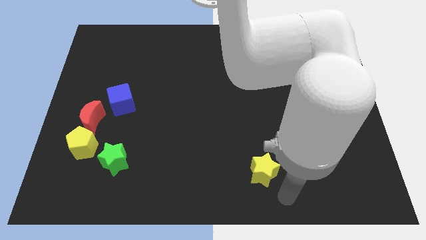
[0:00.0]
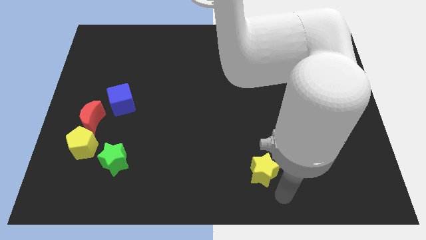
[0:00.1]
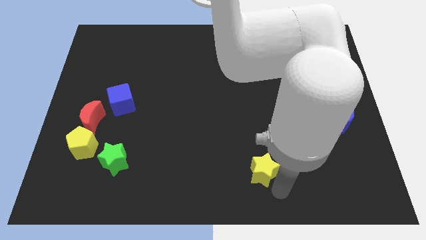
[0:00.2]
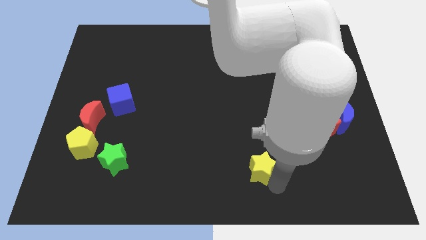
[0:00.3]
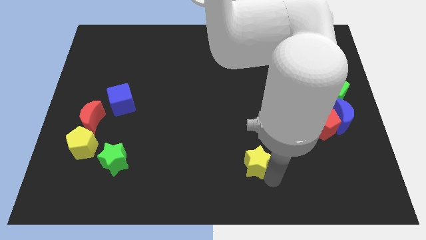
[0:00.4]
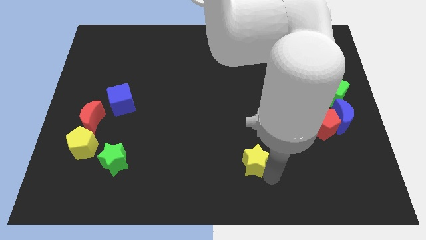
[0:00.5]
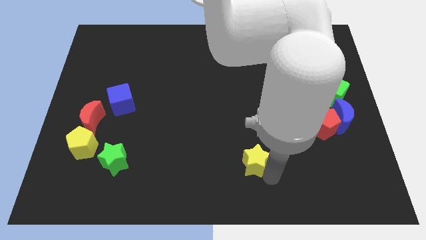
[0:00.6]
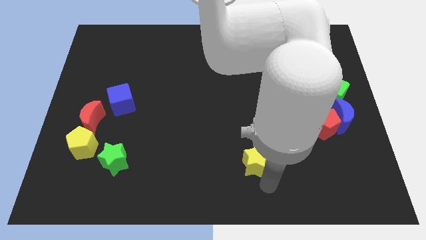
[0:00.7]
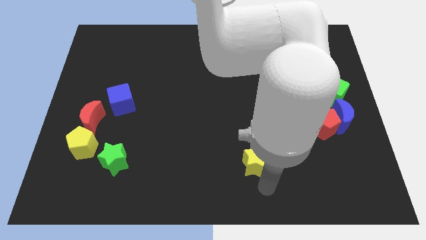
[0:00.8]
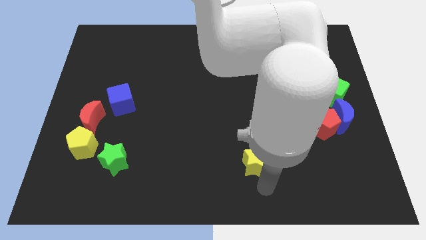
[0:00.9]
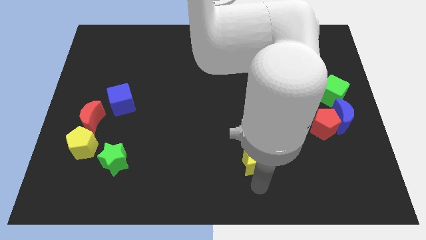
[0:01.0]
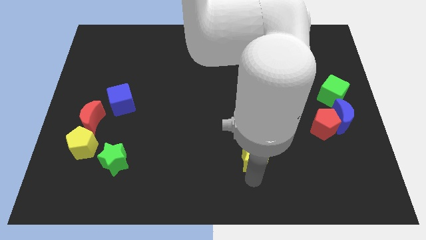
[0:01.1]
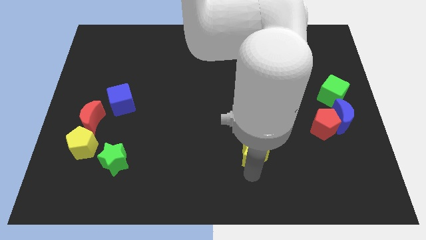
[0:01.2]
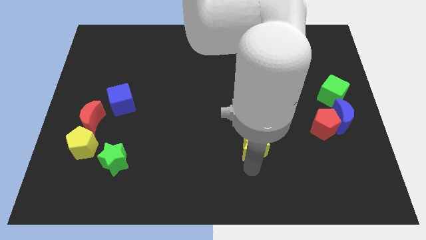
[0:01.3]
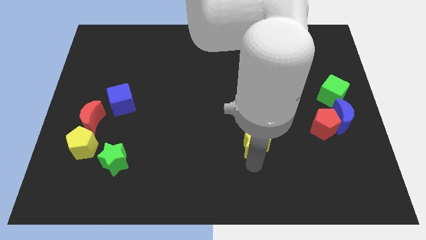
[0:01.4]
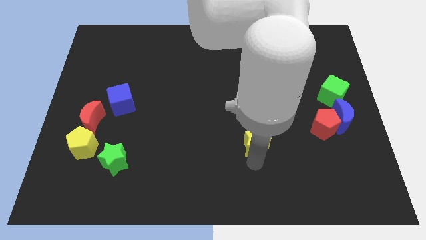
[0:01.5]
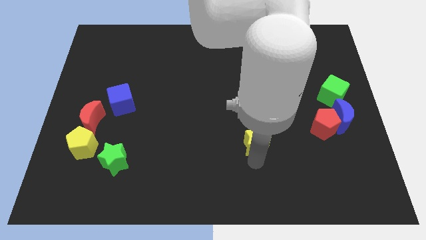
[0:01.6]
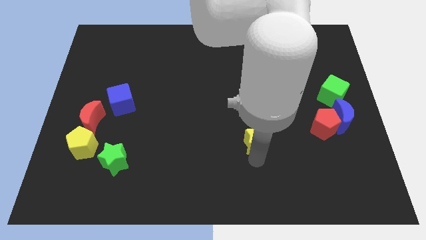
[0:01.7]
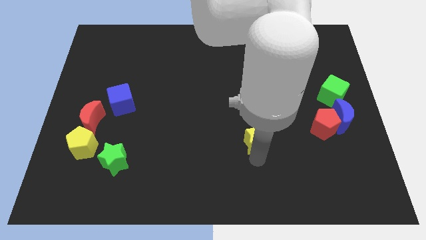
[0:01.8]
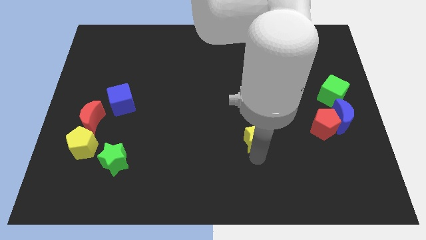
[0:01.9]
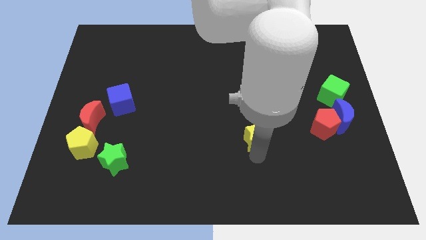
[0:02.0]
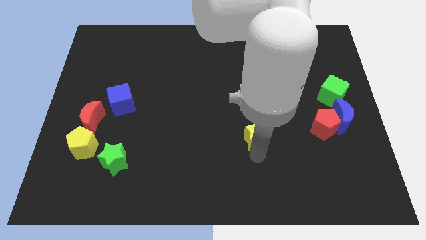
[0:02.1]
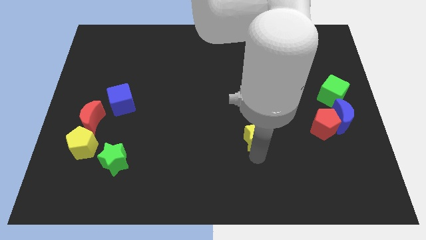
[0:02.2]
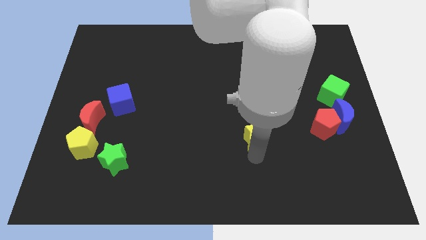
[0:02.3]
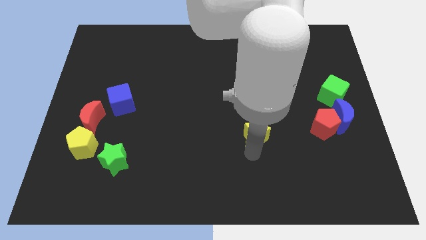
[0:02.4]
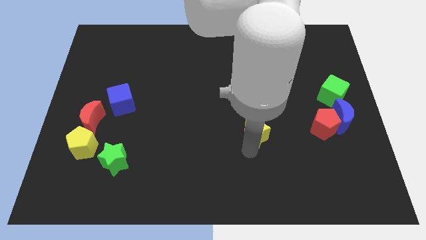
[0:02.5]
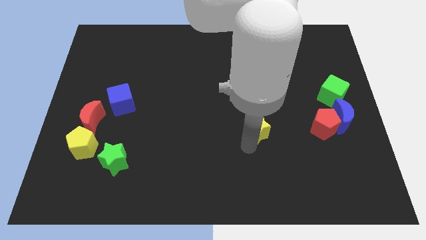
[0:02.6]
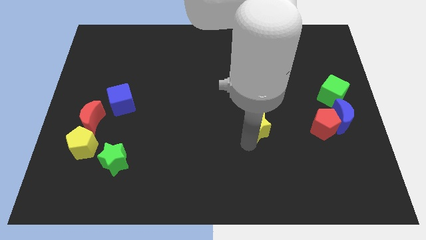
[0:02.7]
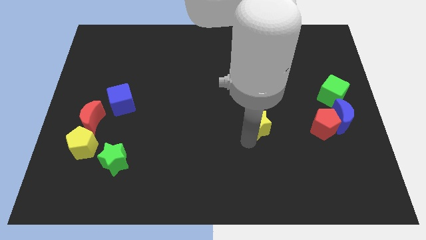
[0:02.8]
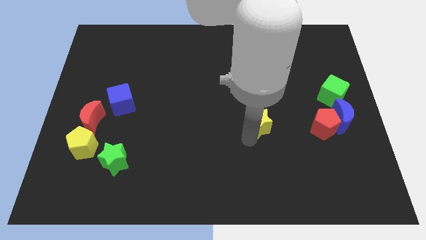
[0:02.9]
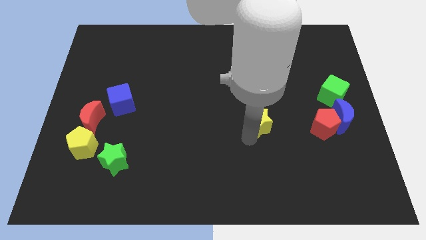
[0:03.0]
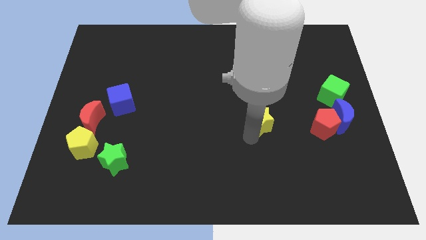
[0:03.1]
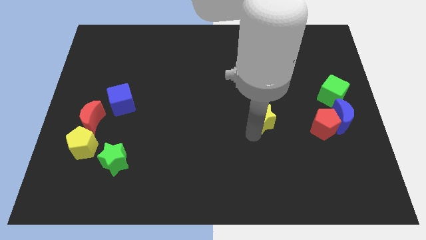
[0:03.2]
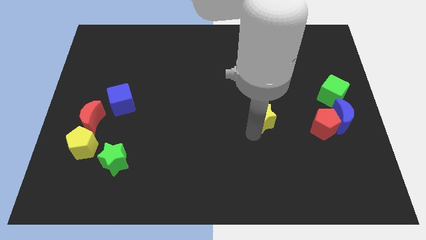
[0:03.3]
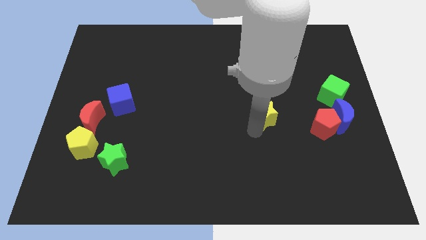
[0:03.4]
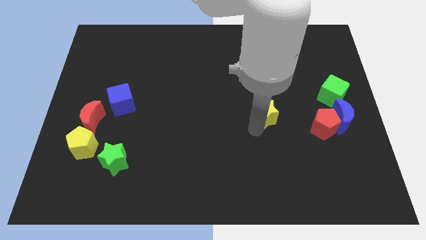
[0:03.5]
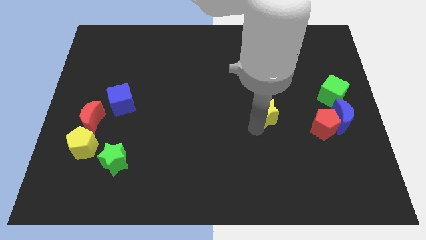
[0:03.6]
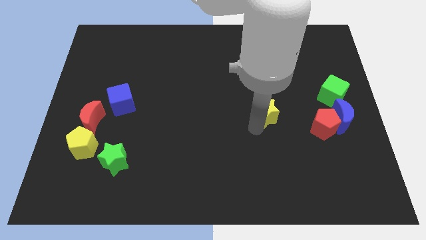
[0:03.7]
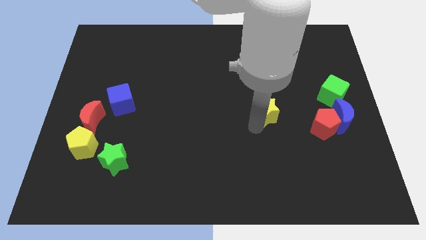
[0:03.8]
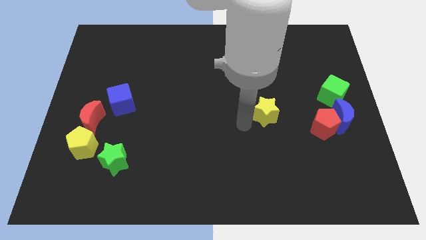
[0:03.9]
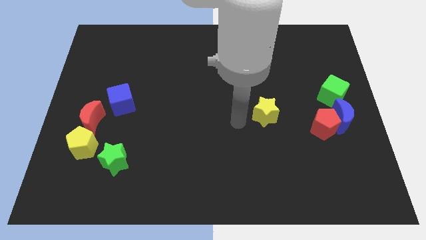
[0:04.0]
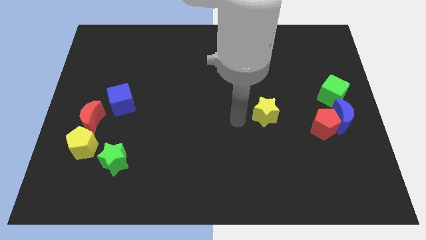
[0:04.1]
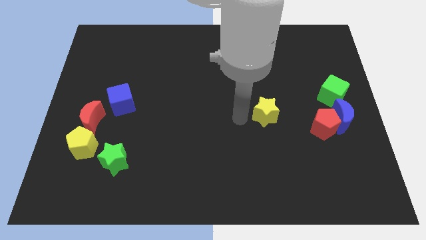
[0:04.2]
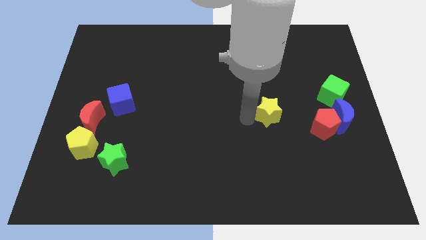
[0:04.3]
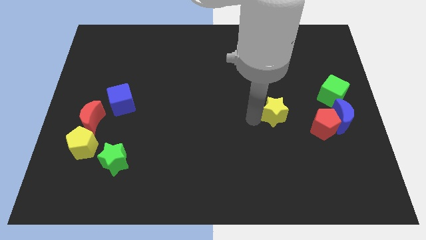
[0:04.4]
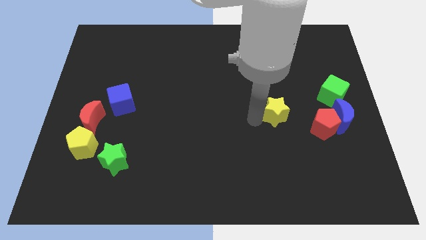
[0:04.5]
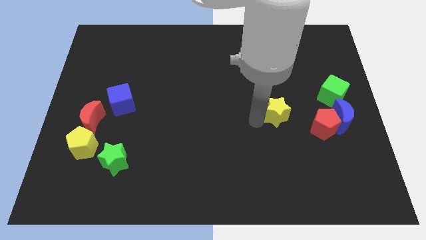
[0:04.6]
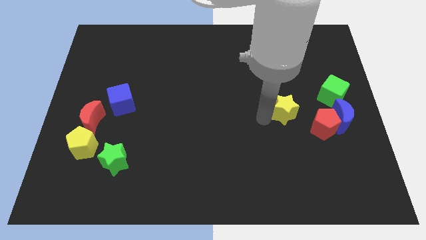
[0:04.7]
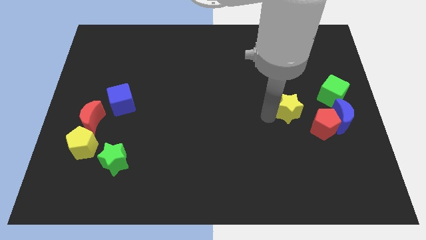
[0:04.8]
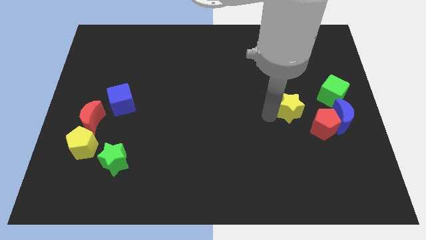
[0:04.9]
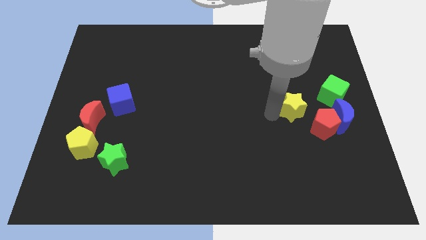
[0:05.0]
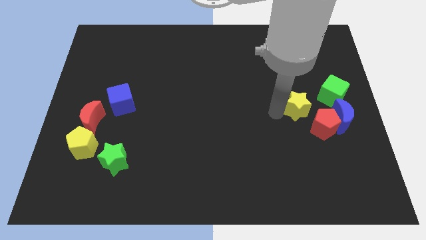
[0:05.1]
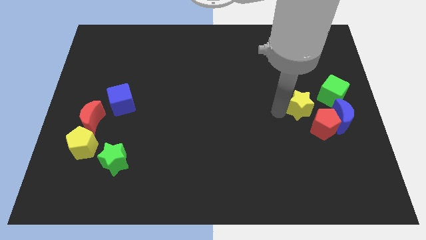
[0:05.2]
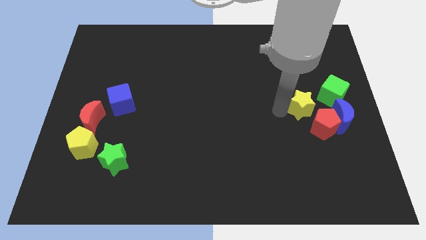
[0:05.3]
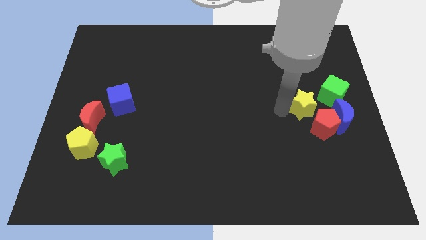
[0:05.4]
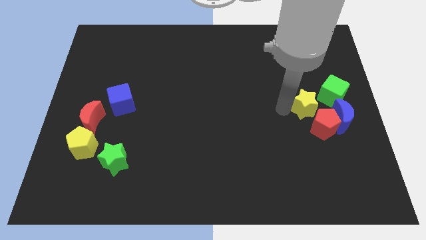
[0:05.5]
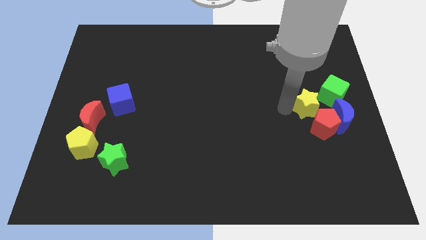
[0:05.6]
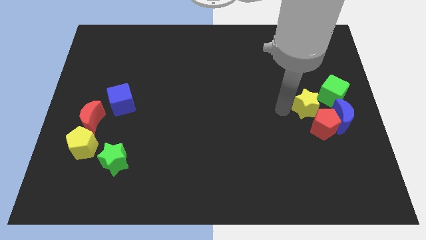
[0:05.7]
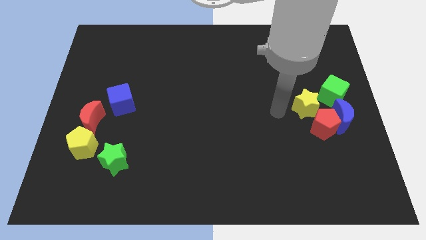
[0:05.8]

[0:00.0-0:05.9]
push yellow star into group of blocks

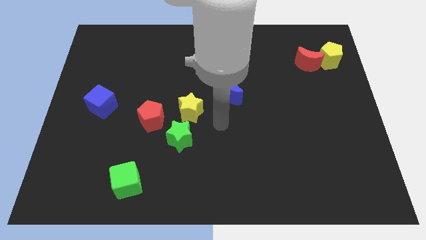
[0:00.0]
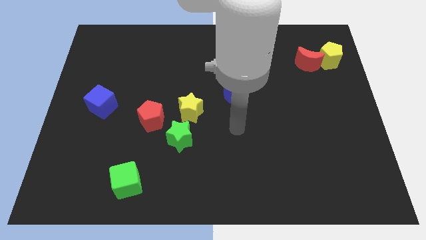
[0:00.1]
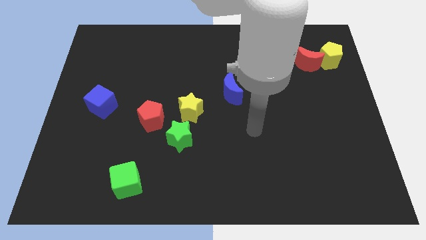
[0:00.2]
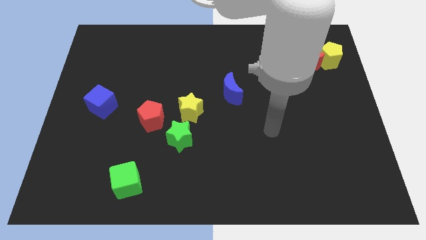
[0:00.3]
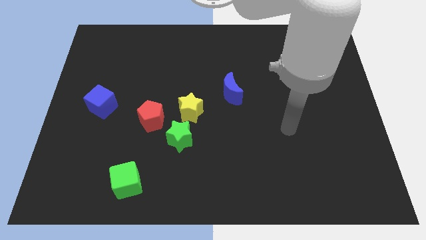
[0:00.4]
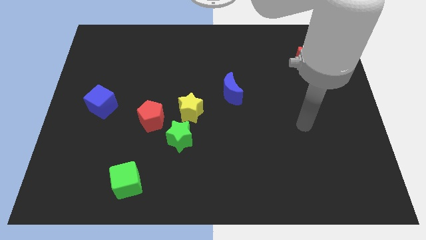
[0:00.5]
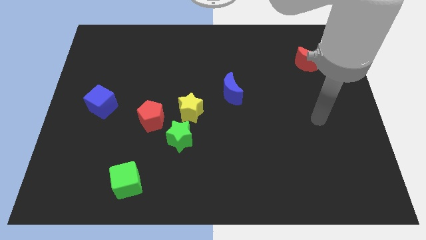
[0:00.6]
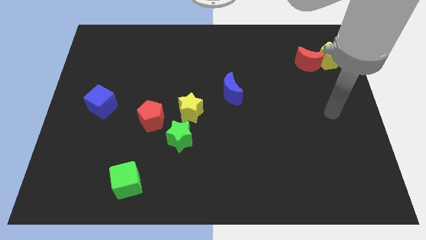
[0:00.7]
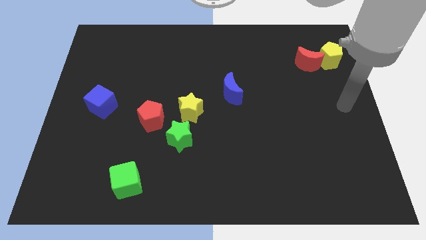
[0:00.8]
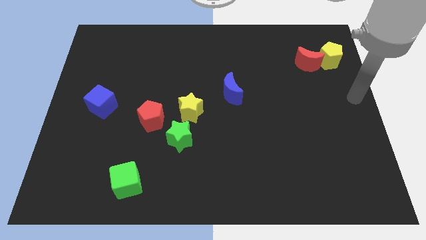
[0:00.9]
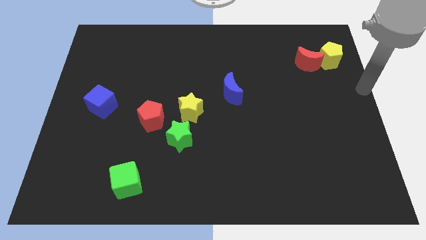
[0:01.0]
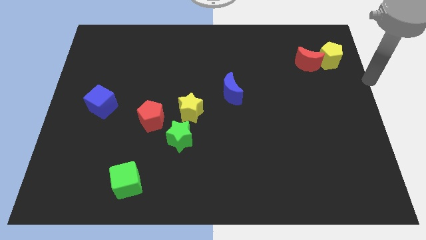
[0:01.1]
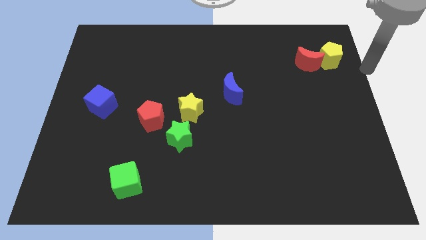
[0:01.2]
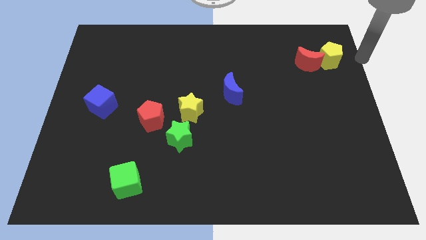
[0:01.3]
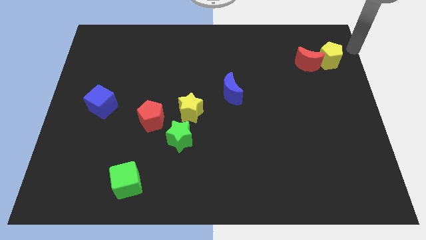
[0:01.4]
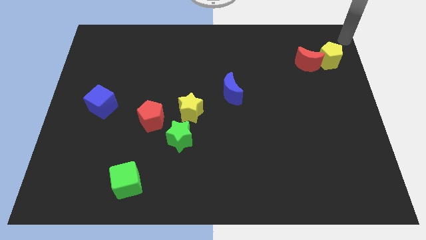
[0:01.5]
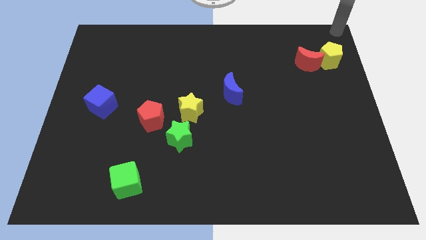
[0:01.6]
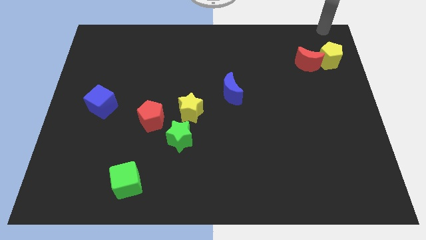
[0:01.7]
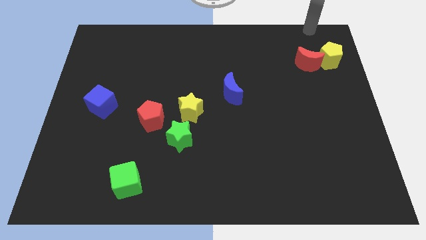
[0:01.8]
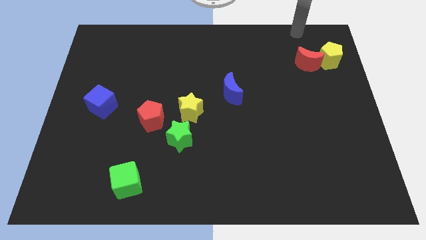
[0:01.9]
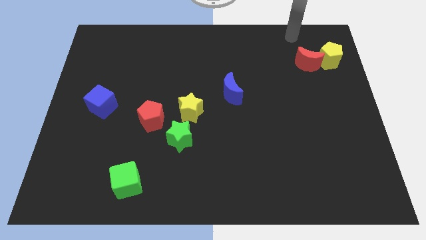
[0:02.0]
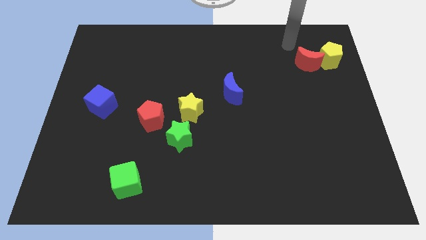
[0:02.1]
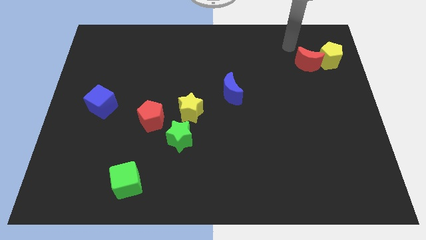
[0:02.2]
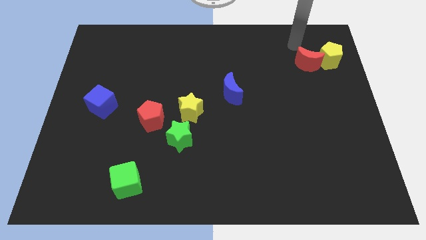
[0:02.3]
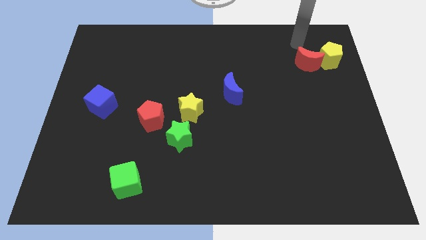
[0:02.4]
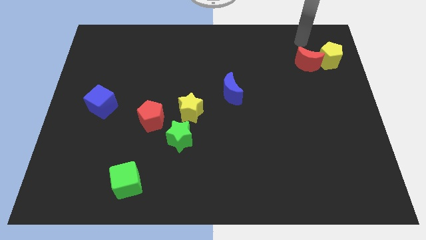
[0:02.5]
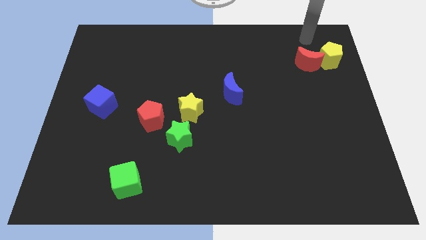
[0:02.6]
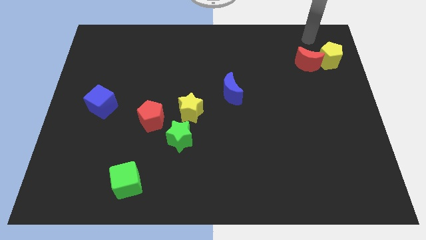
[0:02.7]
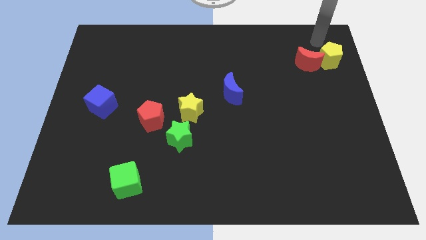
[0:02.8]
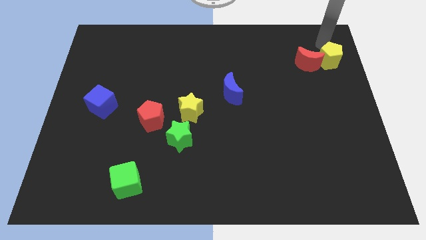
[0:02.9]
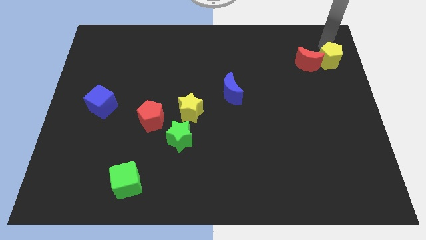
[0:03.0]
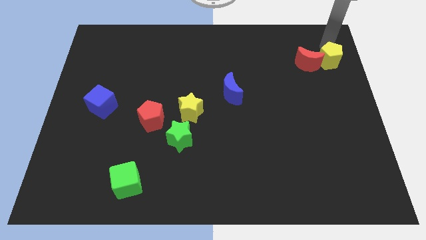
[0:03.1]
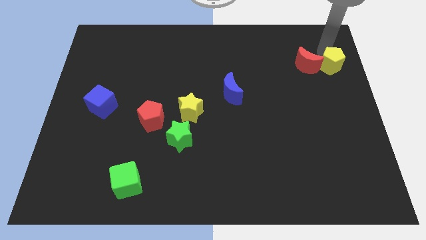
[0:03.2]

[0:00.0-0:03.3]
point your arm at the top of the yellow pentagon
